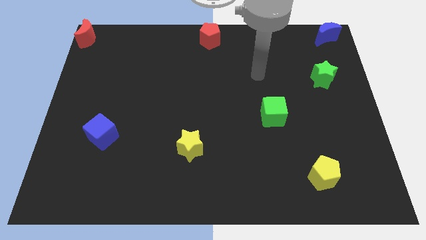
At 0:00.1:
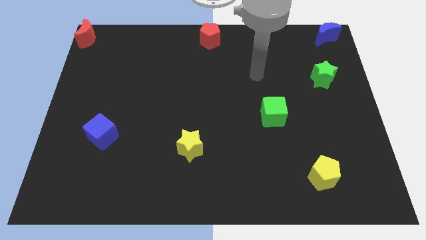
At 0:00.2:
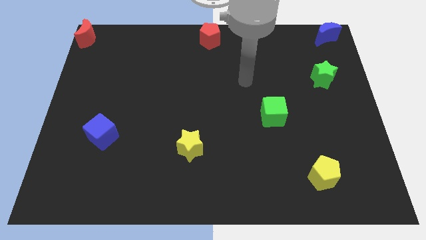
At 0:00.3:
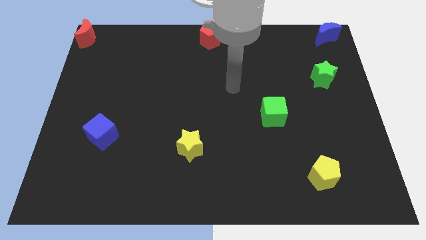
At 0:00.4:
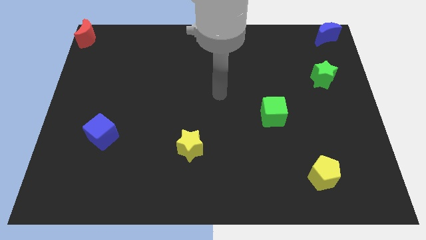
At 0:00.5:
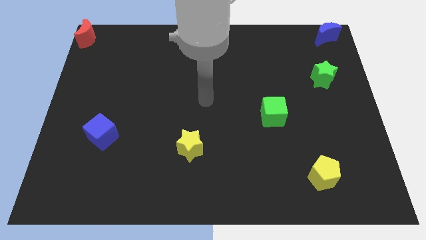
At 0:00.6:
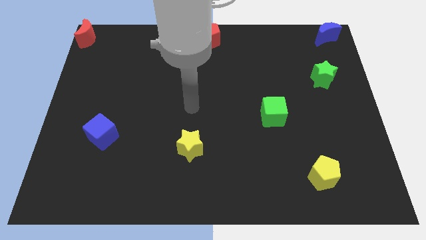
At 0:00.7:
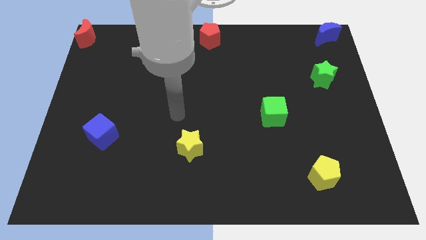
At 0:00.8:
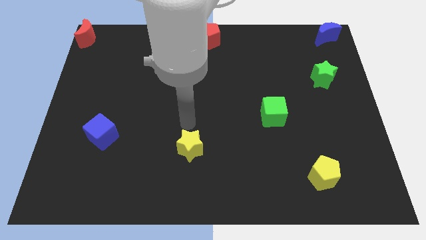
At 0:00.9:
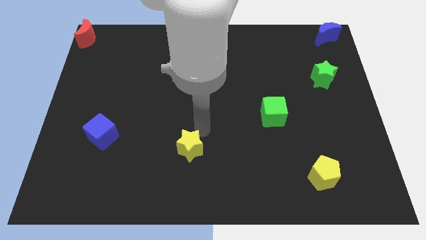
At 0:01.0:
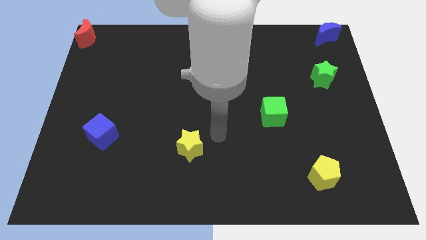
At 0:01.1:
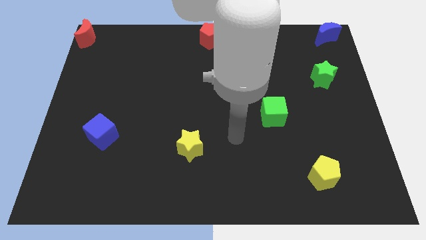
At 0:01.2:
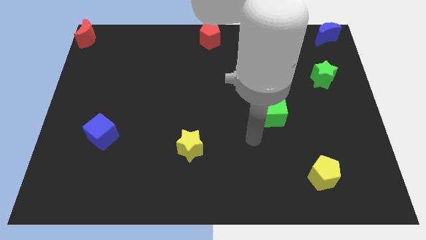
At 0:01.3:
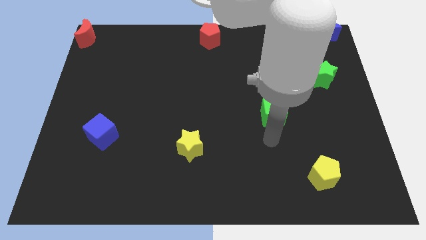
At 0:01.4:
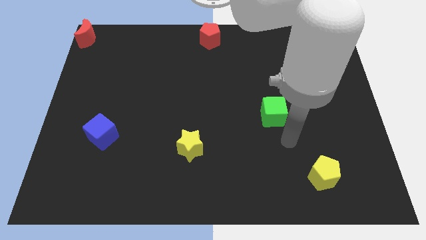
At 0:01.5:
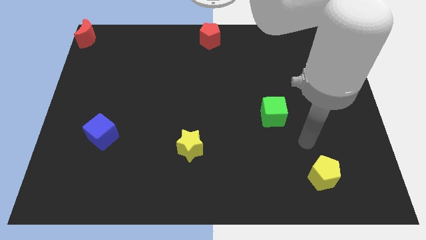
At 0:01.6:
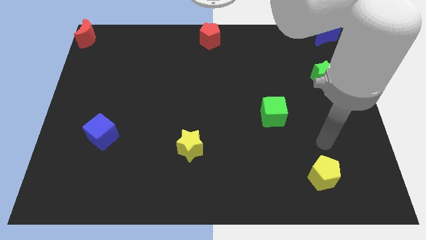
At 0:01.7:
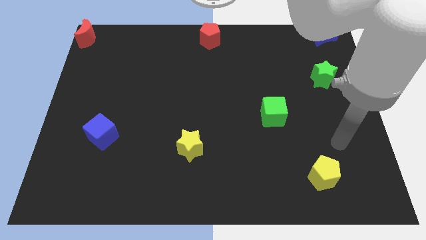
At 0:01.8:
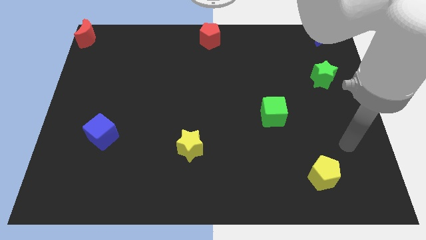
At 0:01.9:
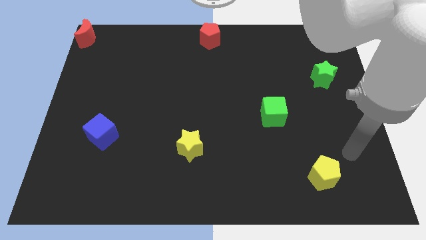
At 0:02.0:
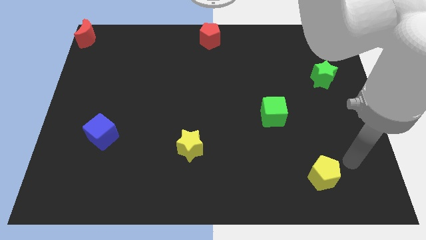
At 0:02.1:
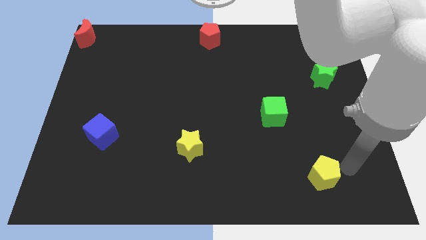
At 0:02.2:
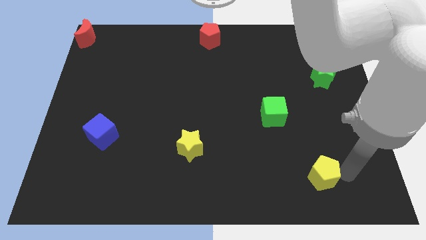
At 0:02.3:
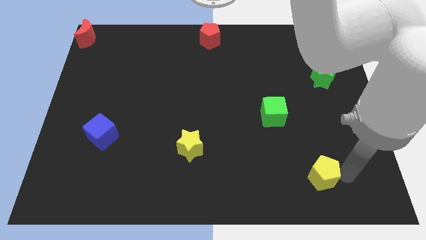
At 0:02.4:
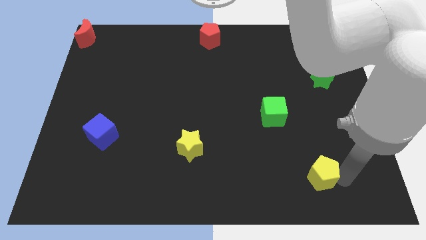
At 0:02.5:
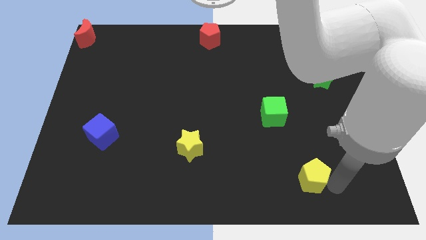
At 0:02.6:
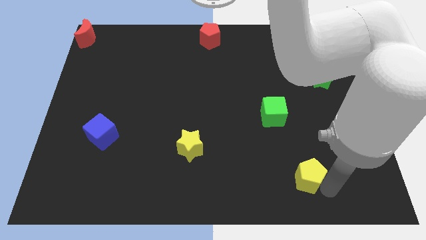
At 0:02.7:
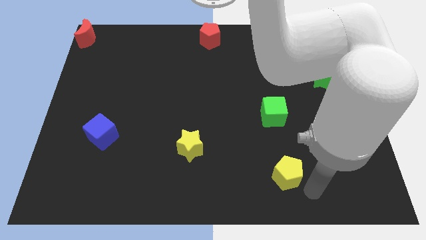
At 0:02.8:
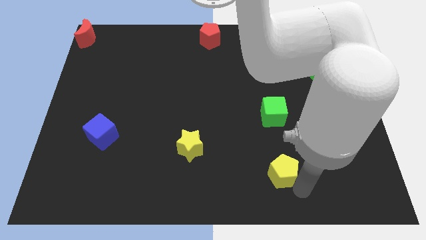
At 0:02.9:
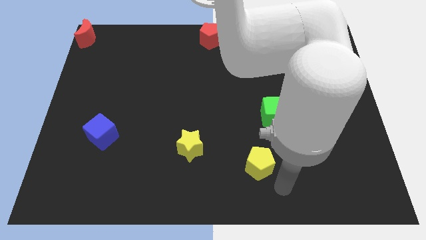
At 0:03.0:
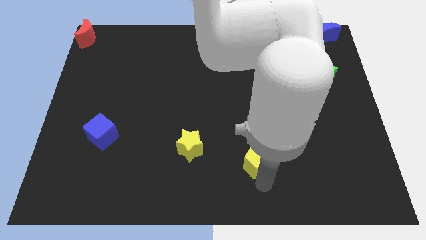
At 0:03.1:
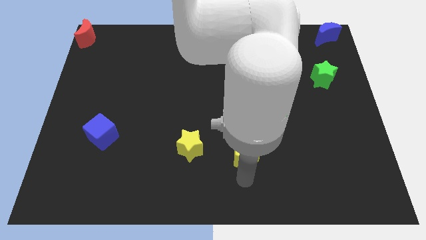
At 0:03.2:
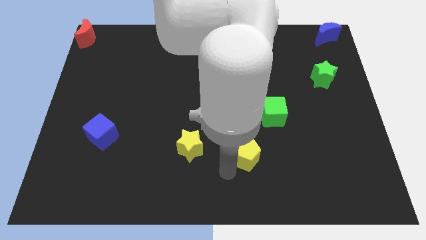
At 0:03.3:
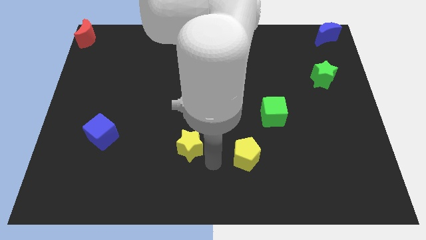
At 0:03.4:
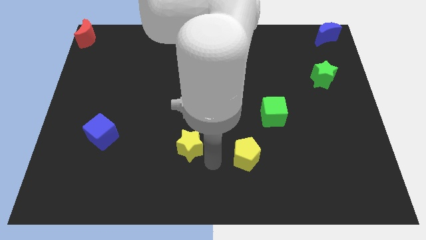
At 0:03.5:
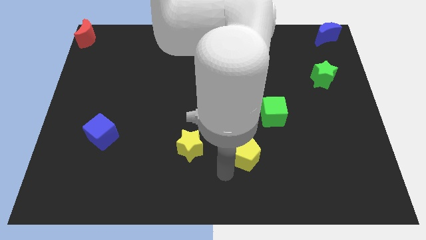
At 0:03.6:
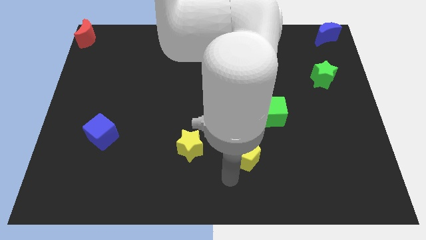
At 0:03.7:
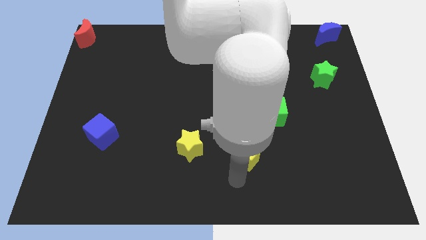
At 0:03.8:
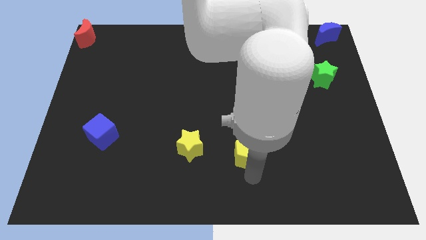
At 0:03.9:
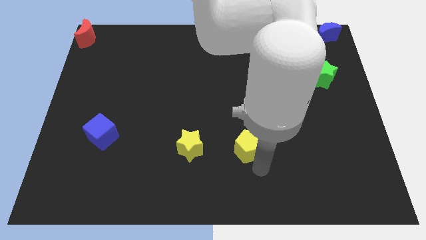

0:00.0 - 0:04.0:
move the yellow pentagon right to the yellow star

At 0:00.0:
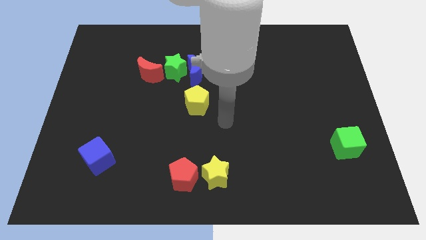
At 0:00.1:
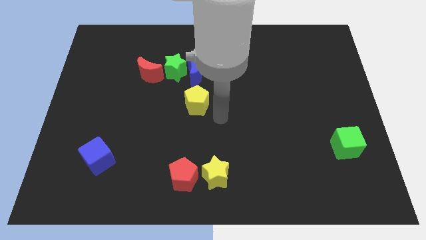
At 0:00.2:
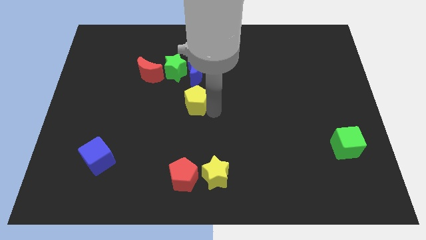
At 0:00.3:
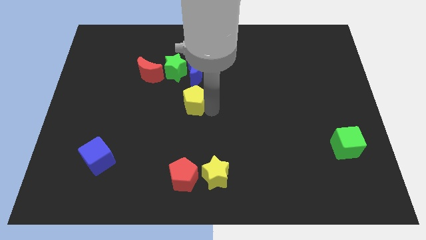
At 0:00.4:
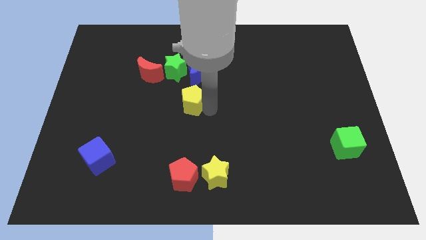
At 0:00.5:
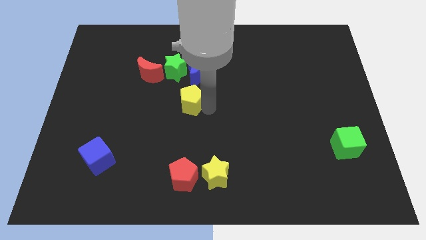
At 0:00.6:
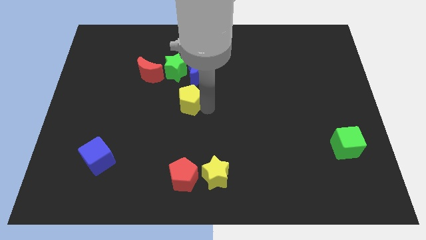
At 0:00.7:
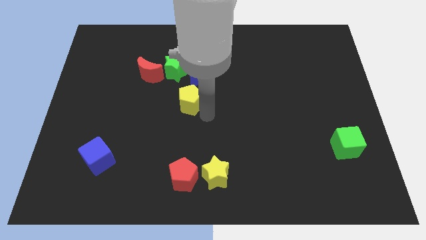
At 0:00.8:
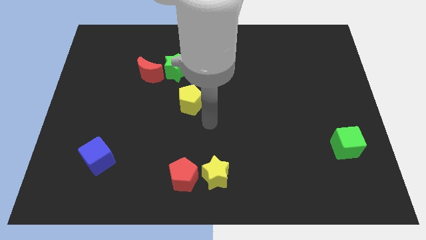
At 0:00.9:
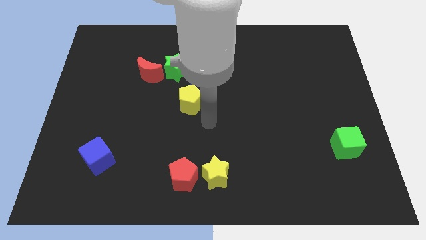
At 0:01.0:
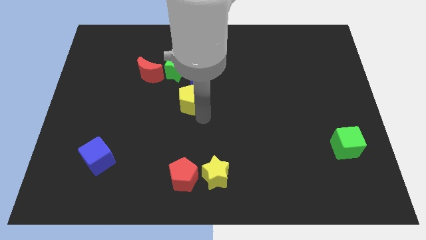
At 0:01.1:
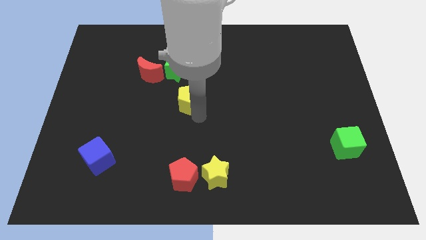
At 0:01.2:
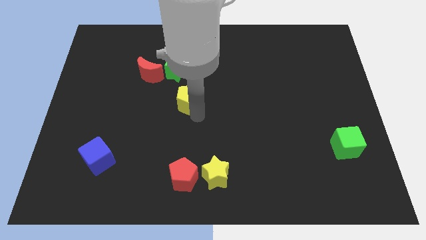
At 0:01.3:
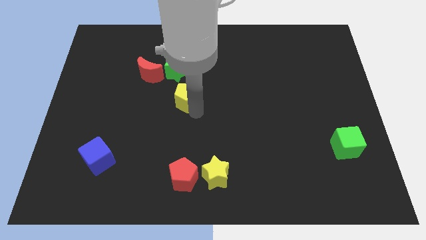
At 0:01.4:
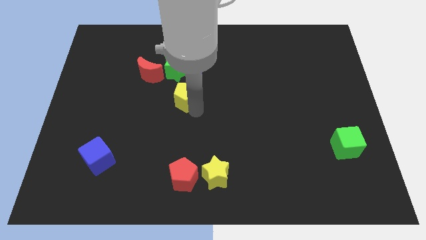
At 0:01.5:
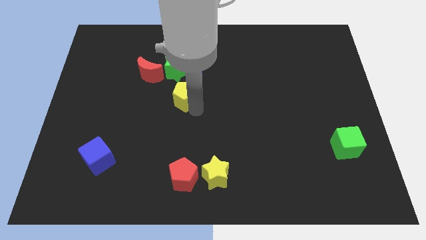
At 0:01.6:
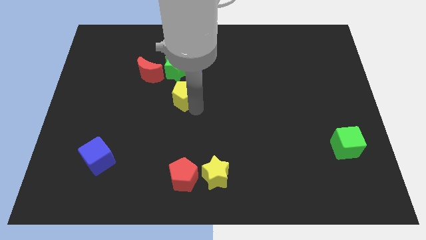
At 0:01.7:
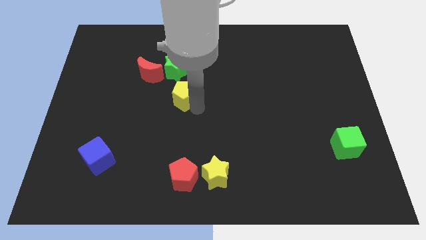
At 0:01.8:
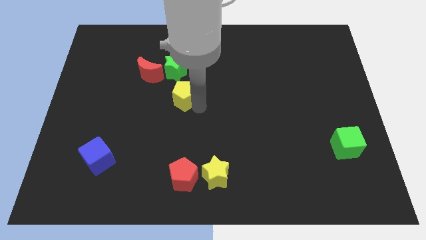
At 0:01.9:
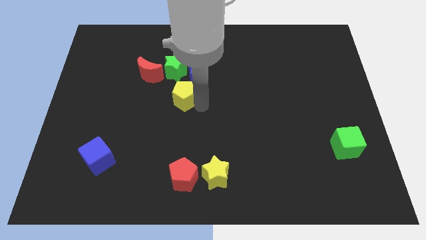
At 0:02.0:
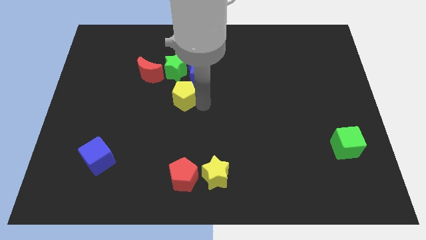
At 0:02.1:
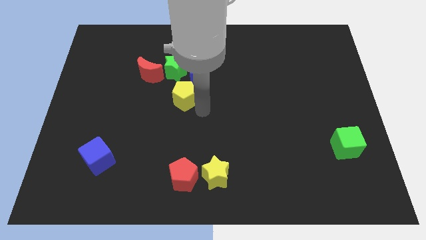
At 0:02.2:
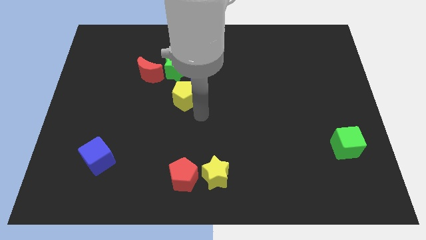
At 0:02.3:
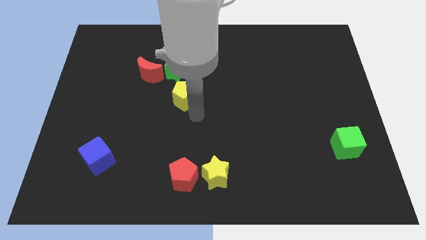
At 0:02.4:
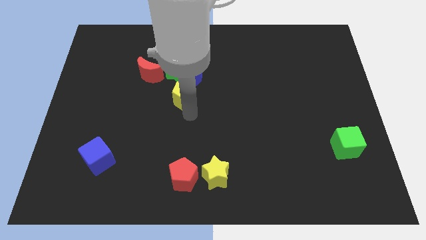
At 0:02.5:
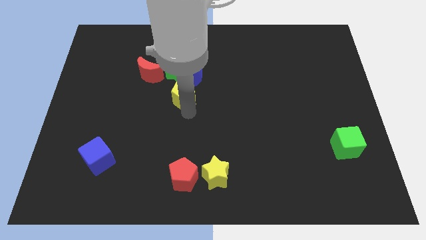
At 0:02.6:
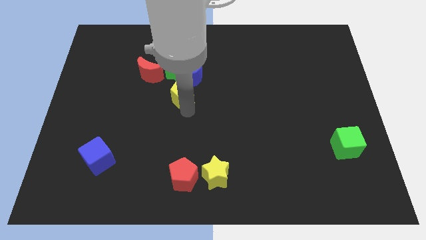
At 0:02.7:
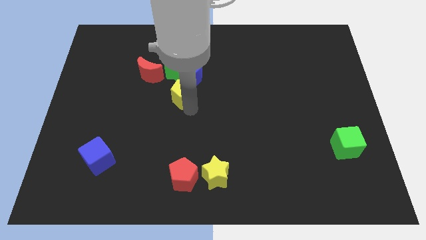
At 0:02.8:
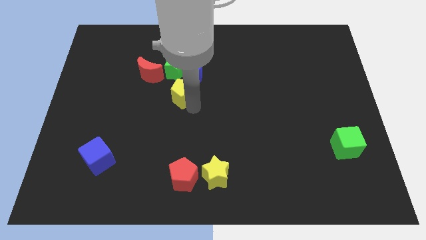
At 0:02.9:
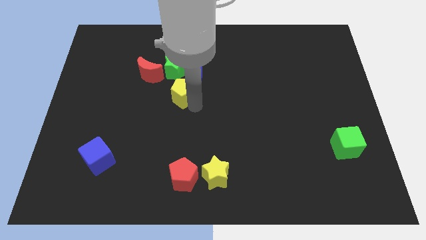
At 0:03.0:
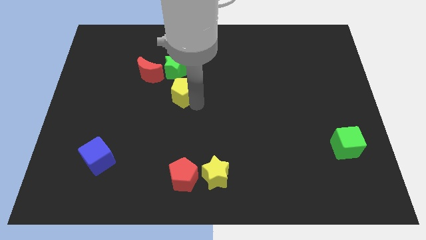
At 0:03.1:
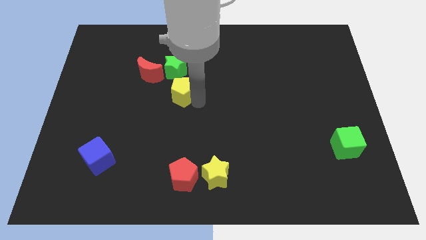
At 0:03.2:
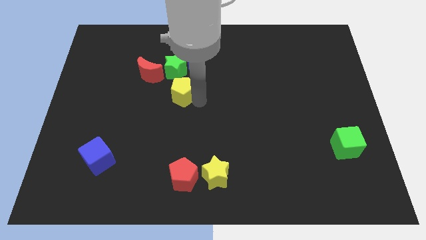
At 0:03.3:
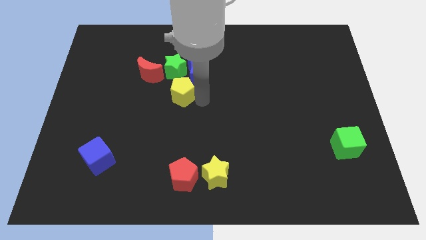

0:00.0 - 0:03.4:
place the yellow pentagon at the top side of the red pentagon

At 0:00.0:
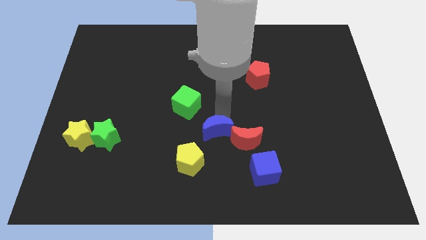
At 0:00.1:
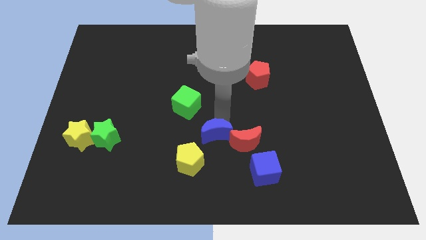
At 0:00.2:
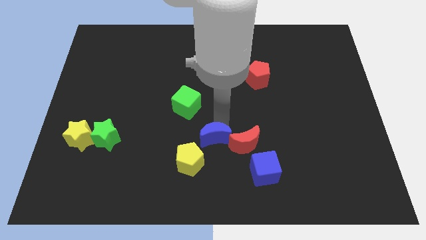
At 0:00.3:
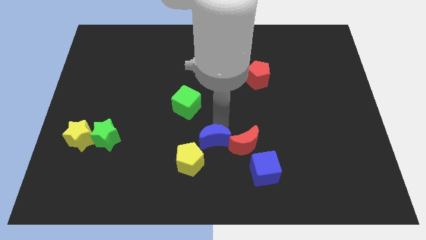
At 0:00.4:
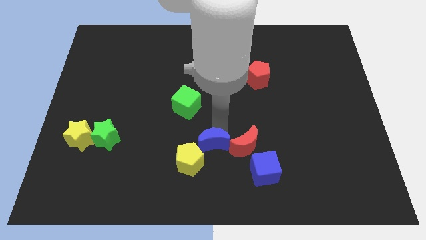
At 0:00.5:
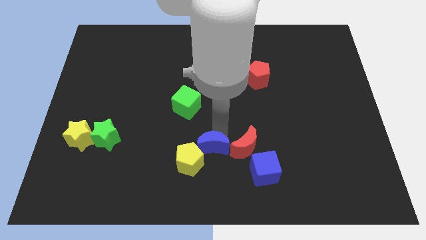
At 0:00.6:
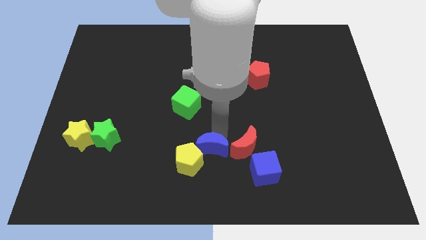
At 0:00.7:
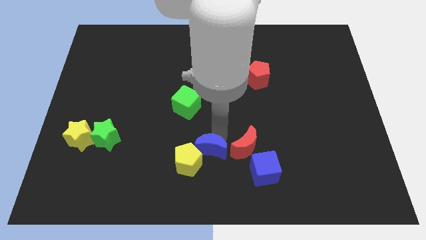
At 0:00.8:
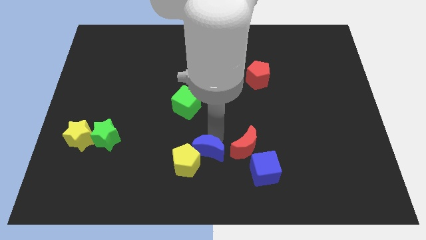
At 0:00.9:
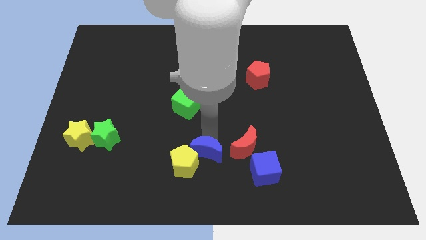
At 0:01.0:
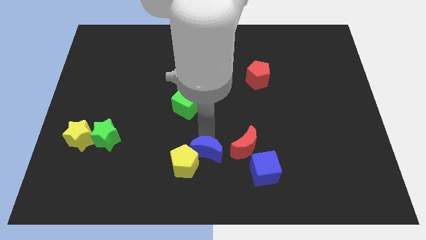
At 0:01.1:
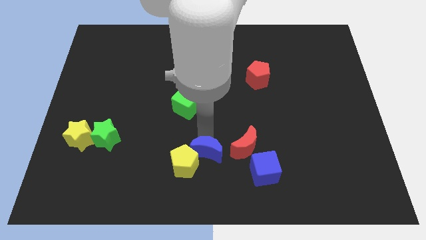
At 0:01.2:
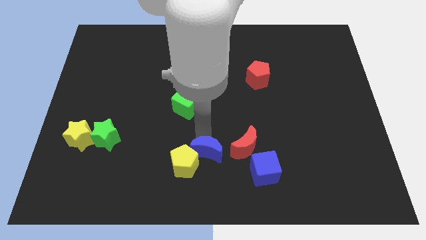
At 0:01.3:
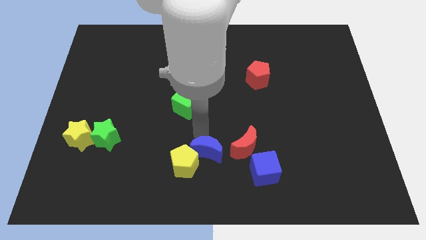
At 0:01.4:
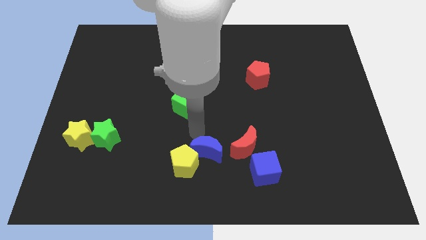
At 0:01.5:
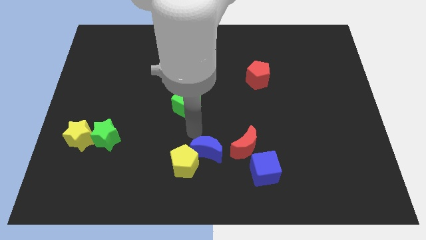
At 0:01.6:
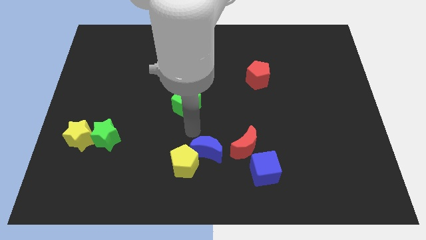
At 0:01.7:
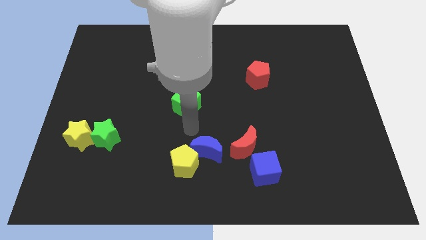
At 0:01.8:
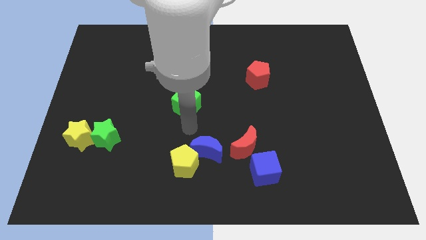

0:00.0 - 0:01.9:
move the blue crescent to the top right side of the yellow pentagon
